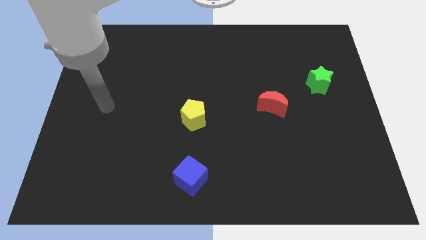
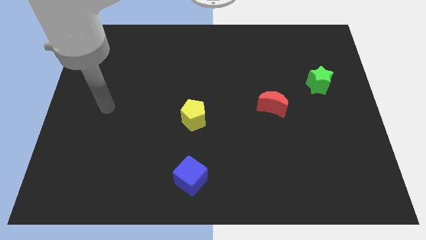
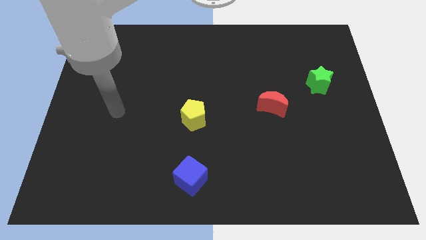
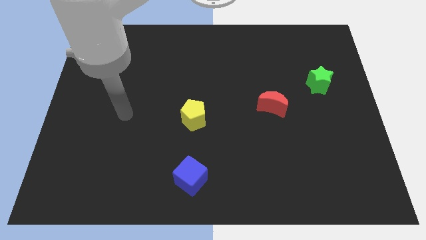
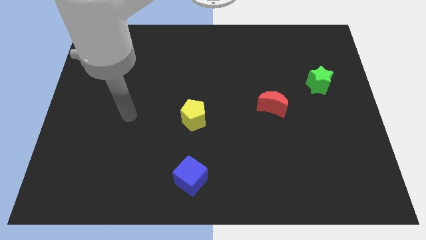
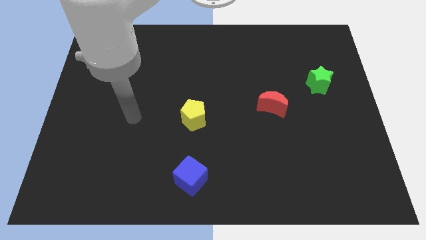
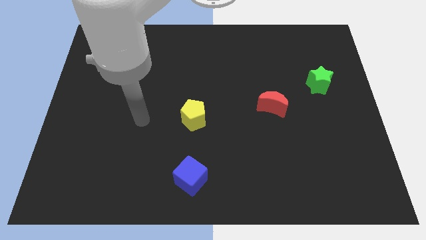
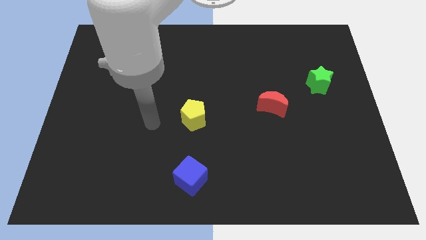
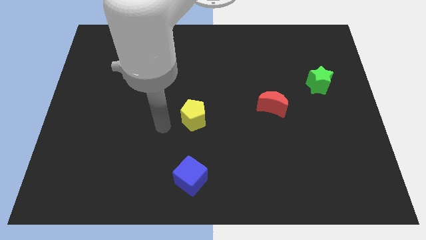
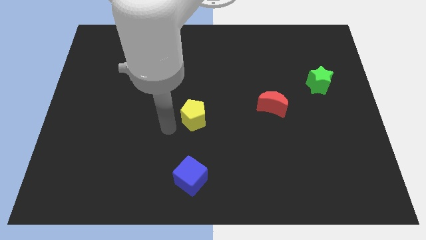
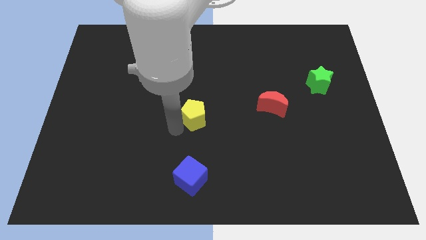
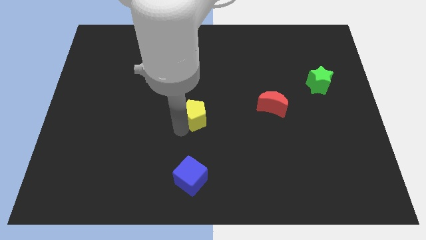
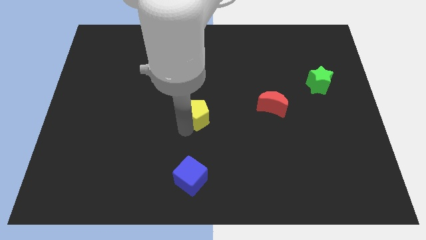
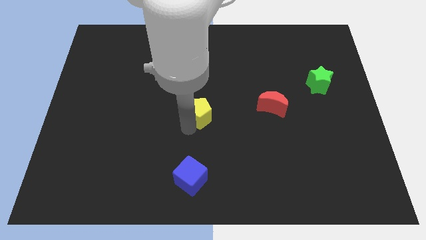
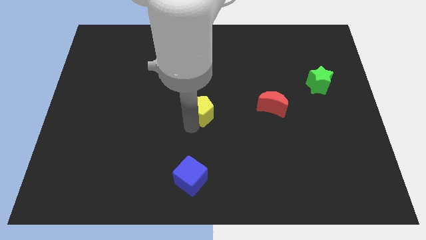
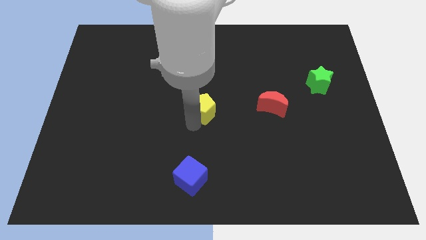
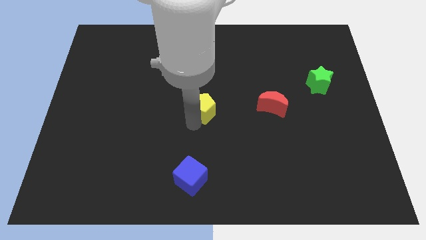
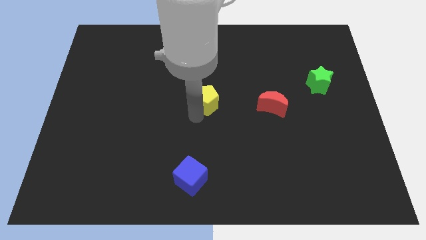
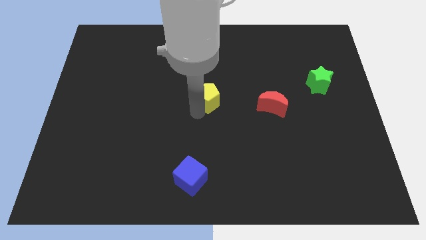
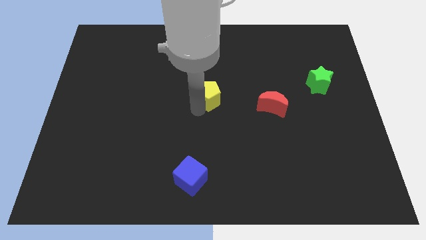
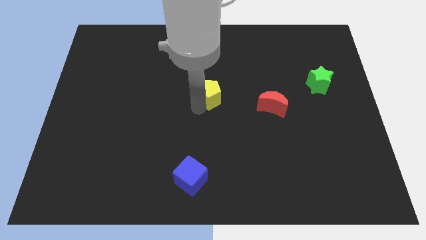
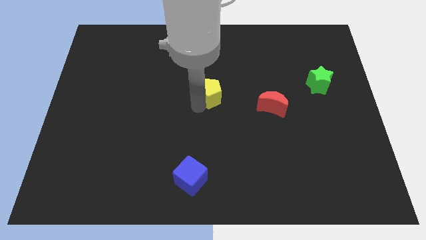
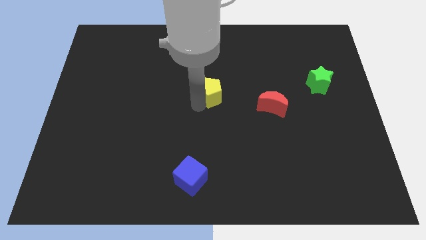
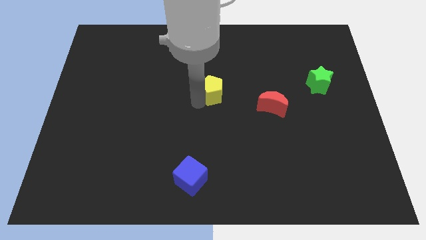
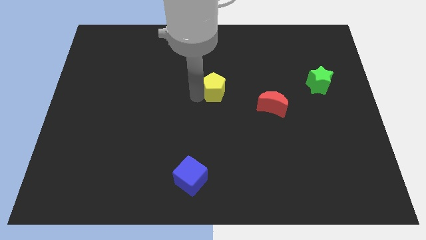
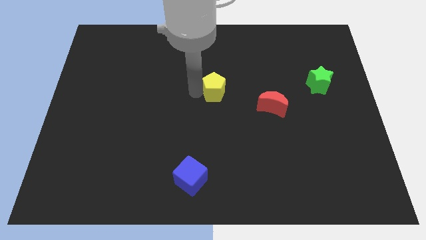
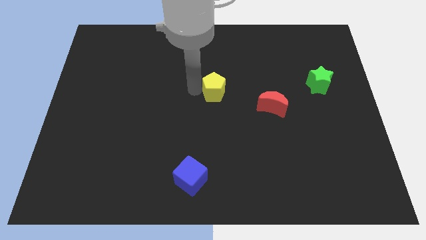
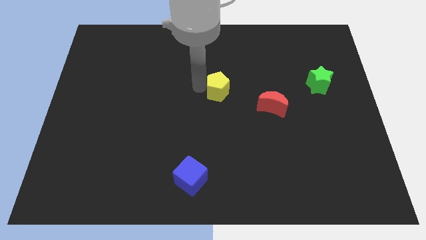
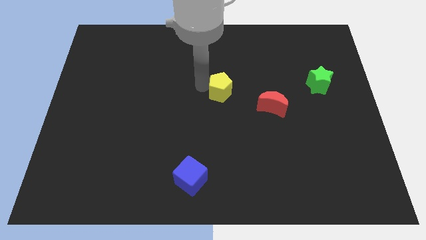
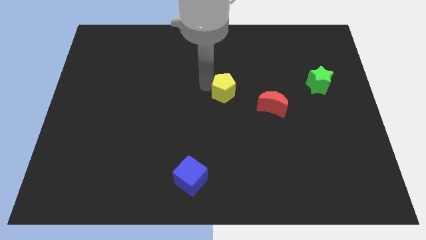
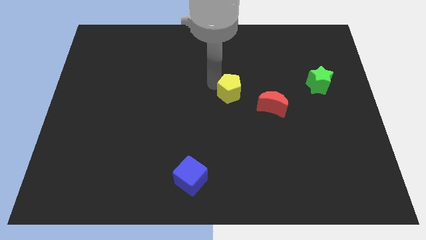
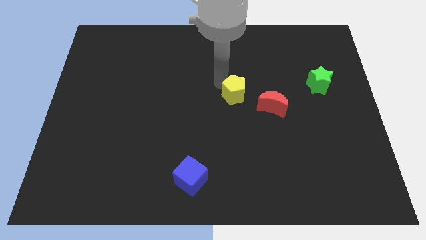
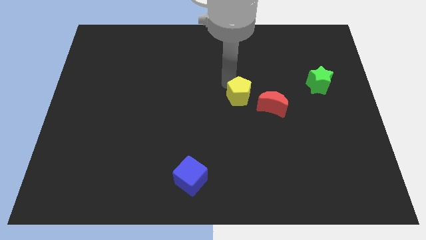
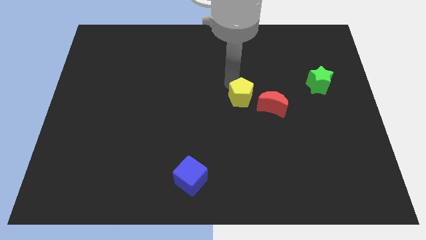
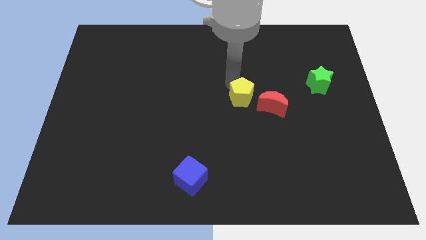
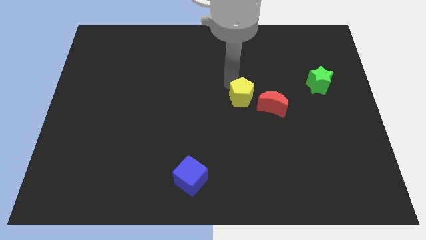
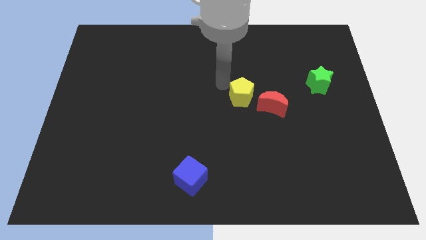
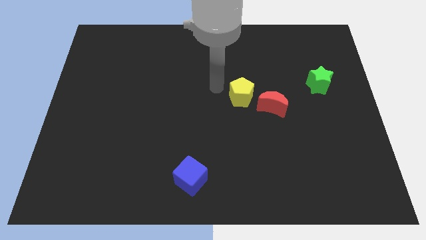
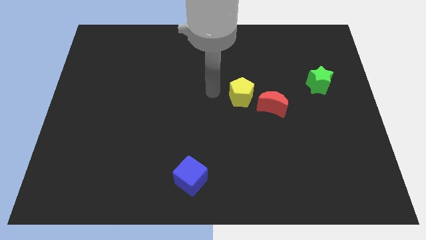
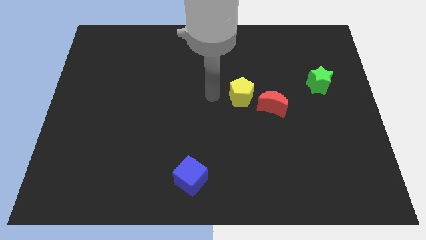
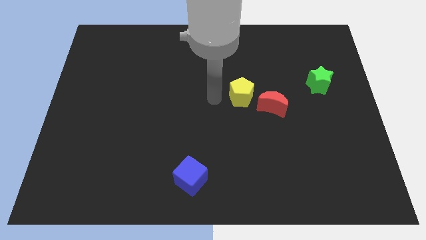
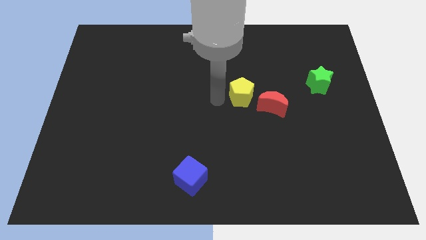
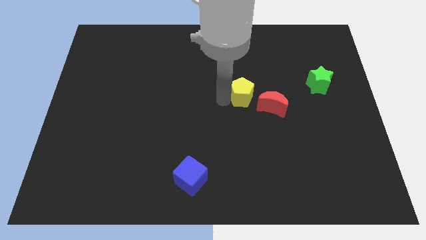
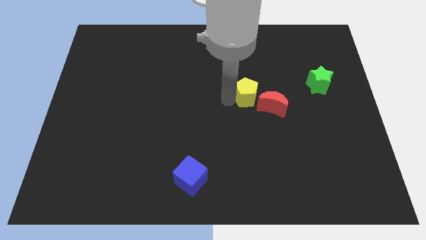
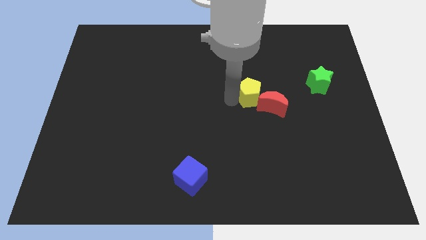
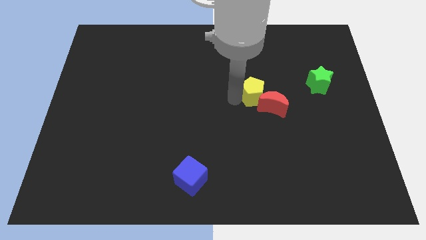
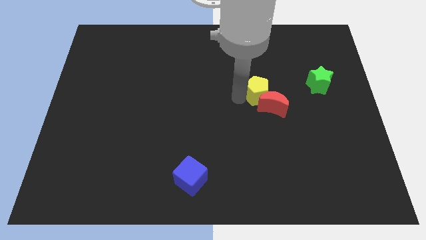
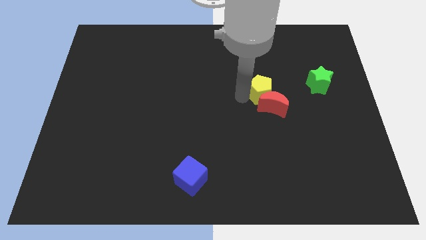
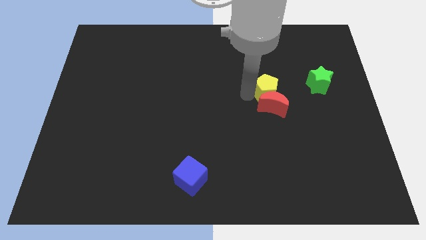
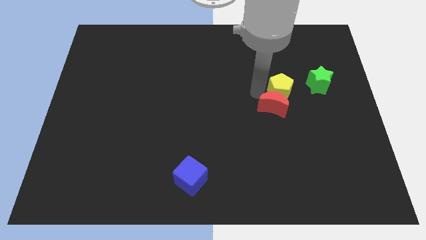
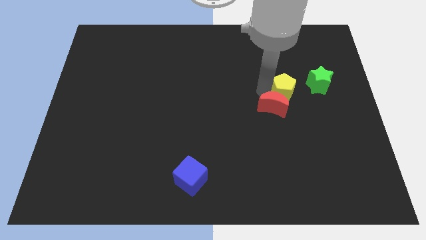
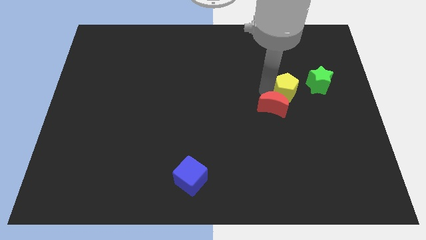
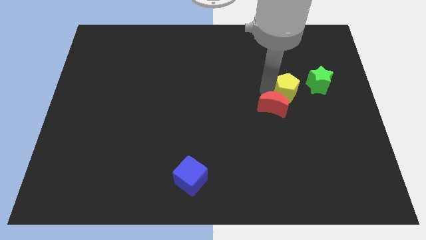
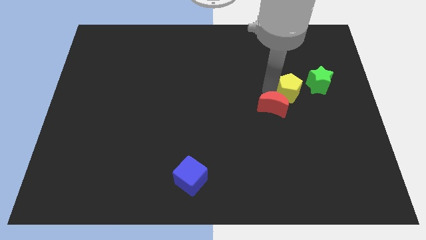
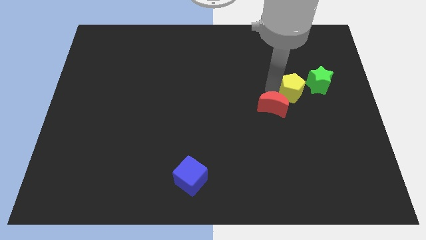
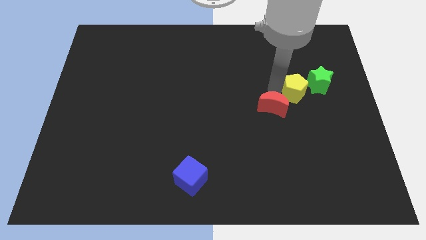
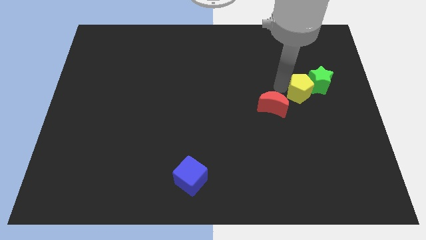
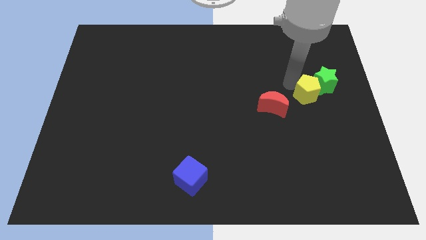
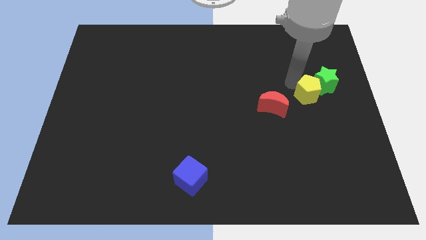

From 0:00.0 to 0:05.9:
put the yellow block to the green star

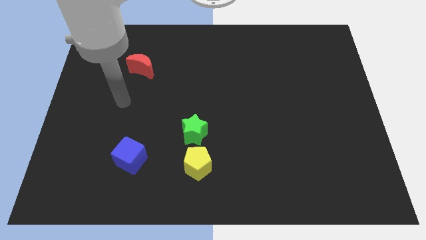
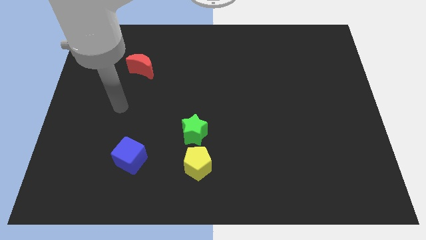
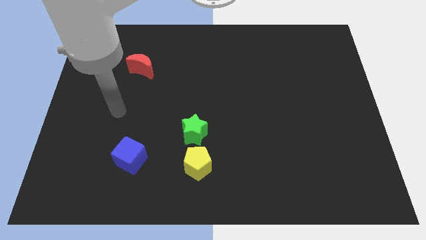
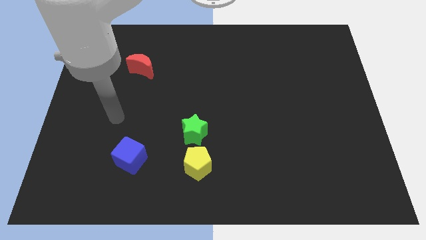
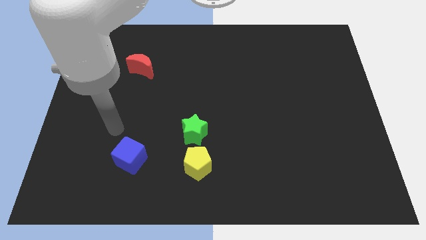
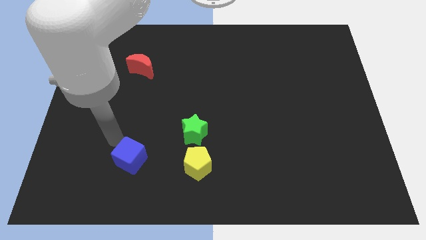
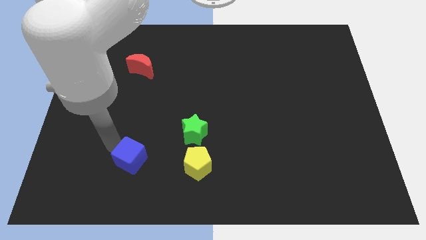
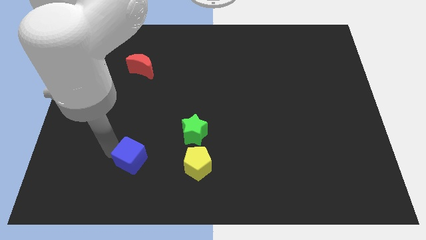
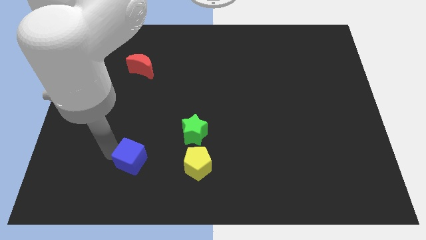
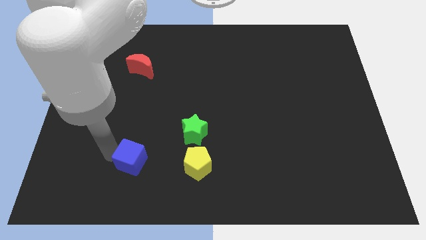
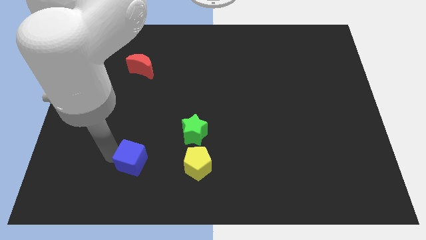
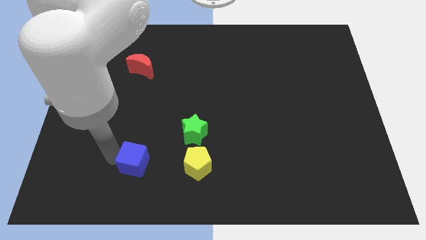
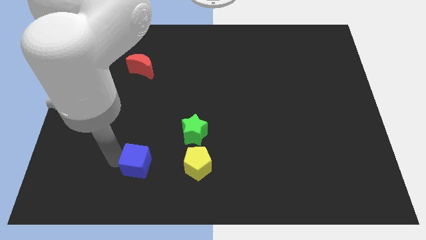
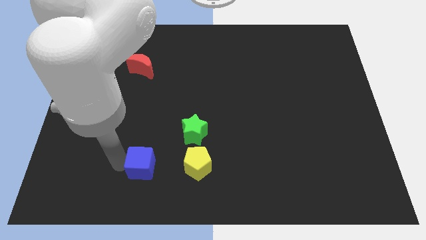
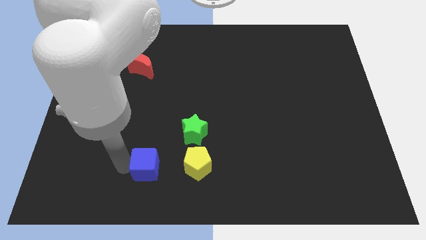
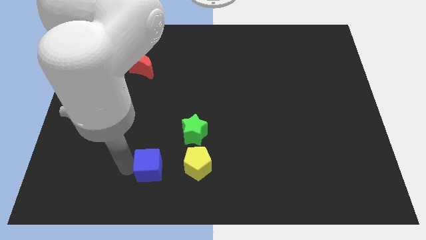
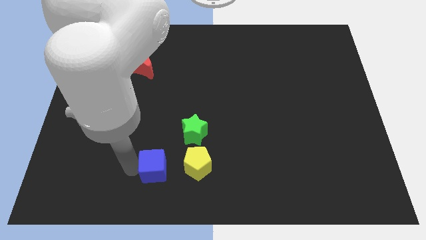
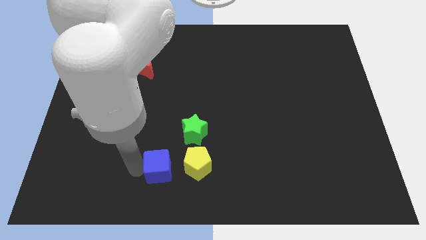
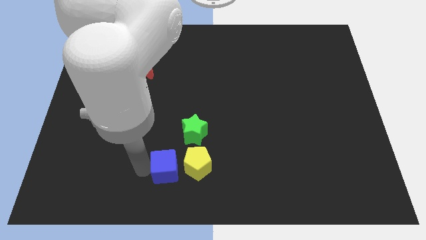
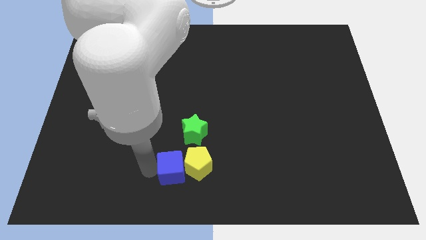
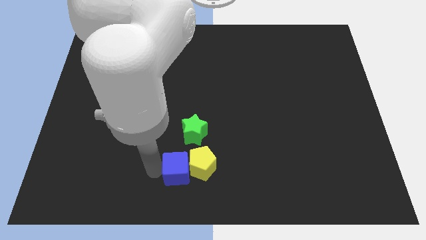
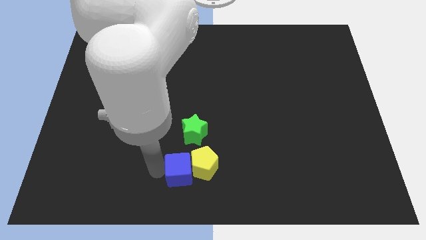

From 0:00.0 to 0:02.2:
put the blue cube to the yellow pentagon

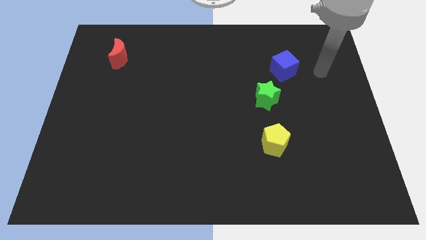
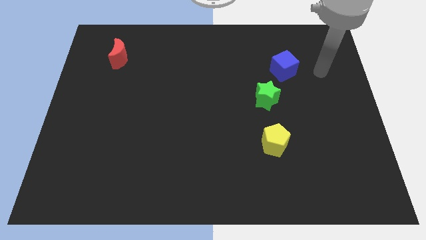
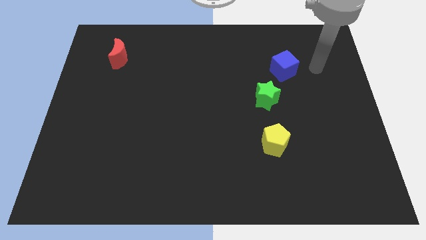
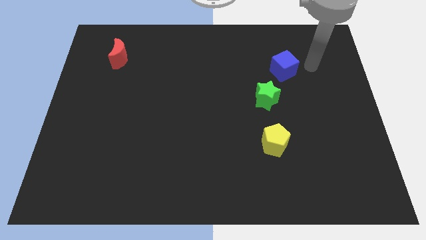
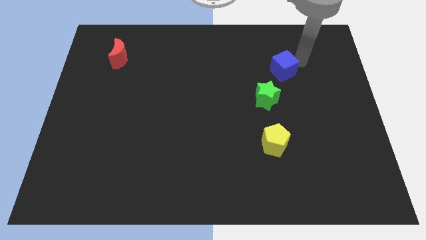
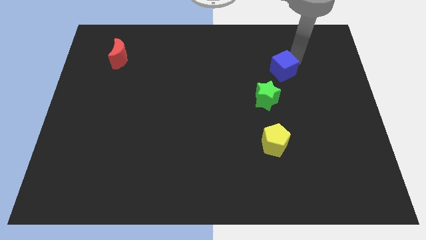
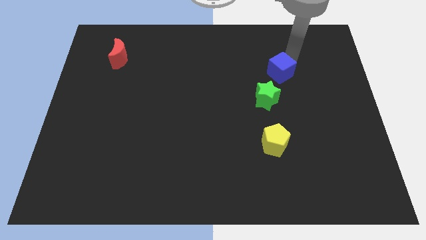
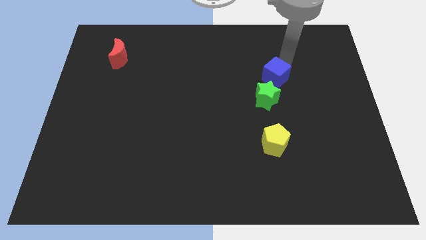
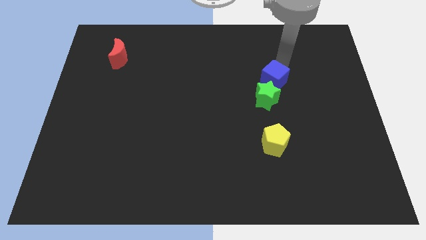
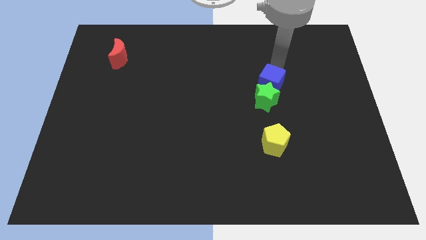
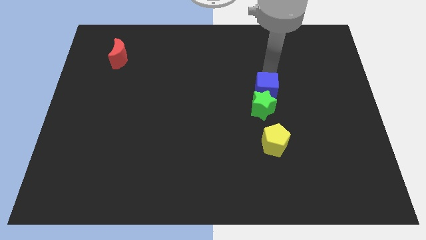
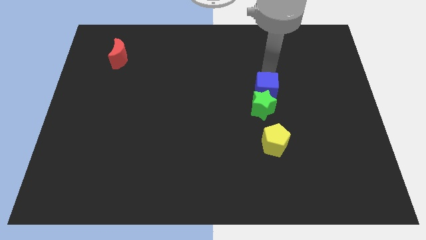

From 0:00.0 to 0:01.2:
push the cube to the green star
